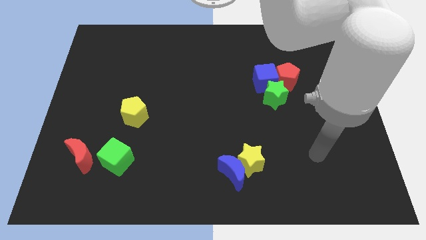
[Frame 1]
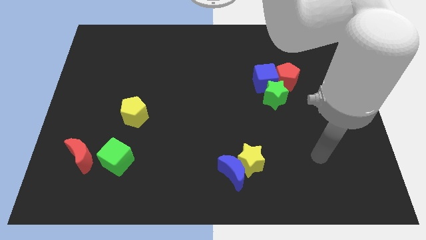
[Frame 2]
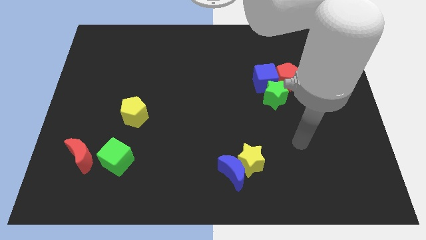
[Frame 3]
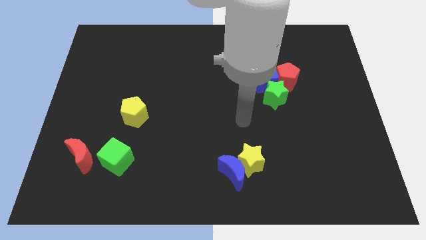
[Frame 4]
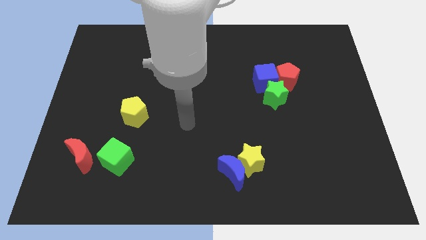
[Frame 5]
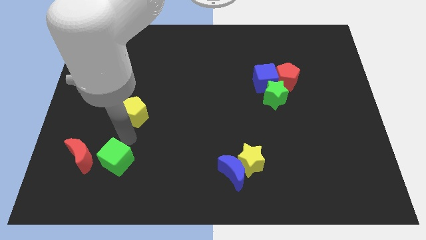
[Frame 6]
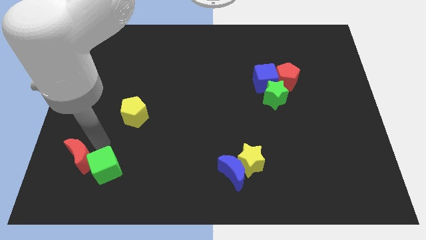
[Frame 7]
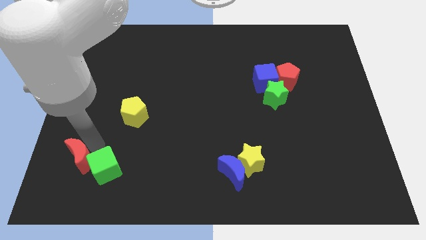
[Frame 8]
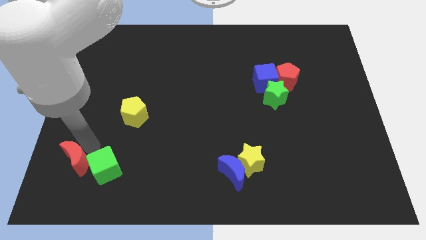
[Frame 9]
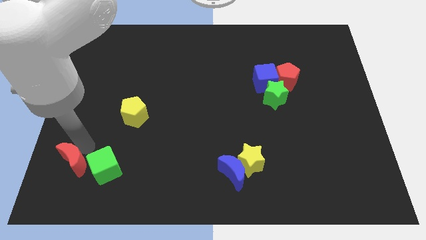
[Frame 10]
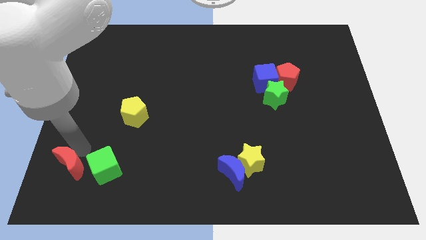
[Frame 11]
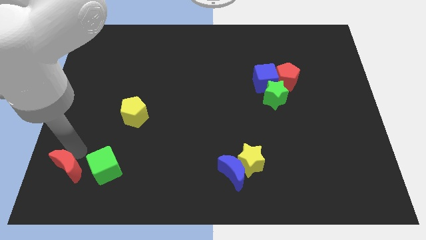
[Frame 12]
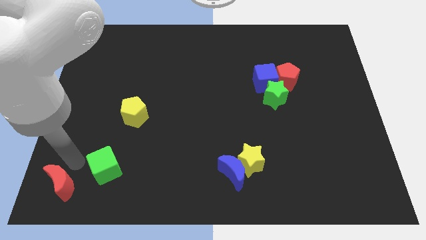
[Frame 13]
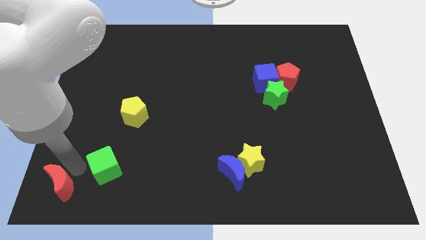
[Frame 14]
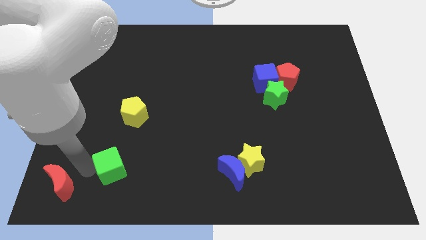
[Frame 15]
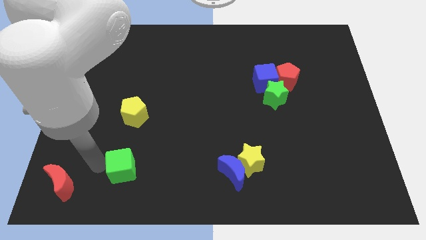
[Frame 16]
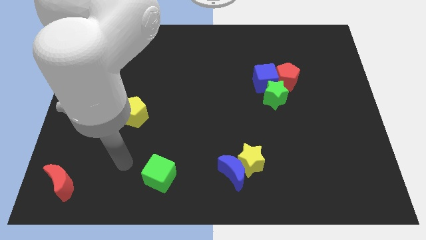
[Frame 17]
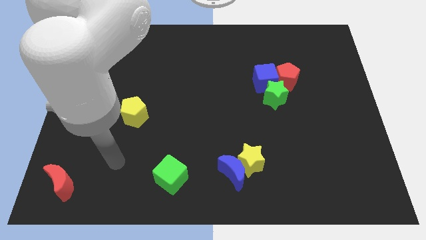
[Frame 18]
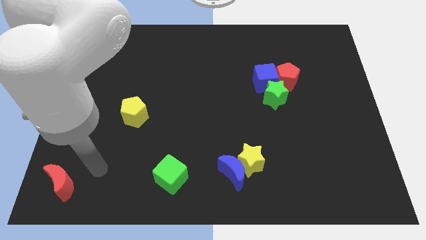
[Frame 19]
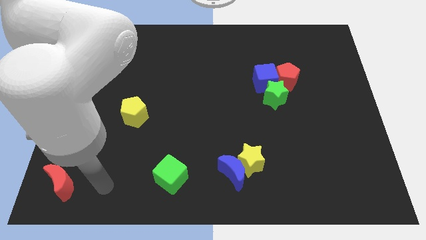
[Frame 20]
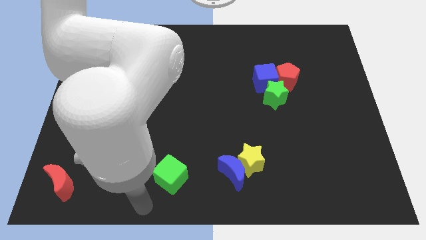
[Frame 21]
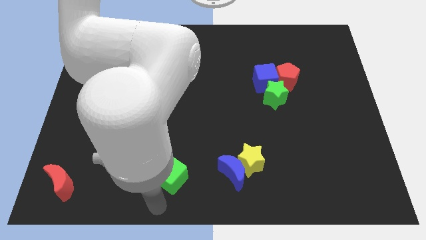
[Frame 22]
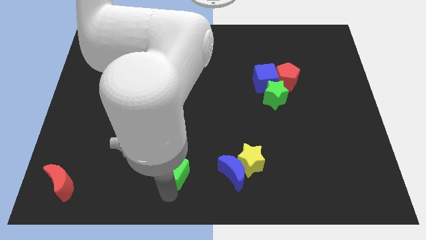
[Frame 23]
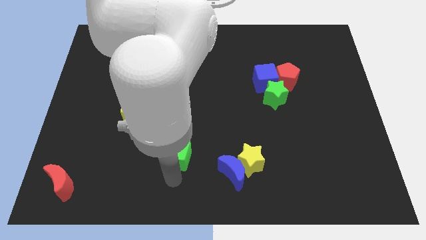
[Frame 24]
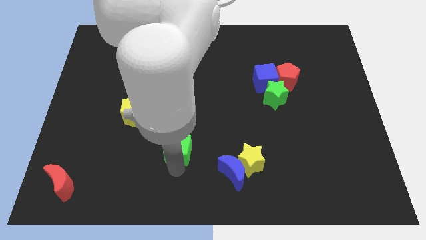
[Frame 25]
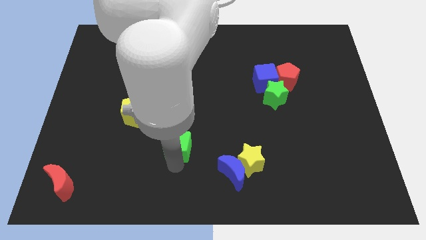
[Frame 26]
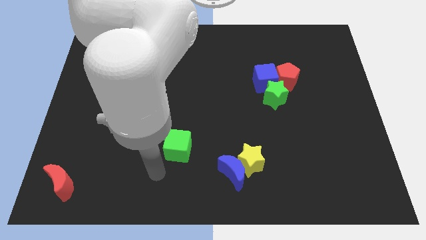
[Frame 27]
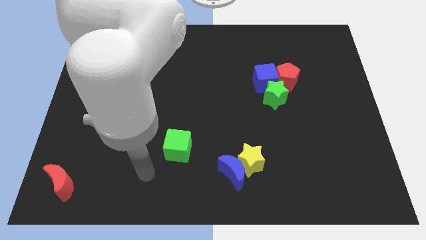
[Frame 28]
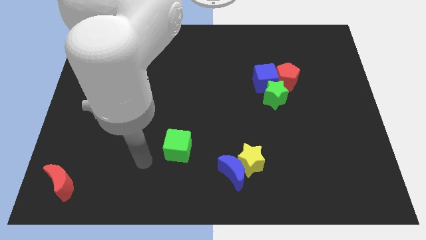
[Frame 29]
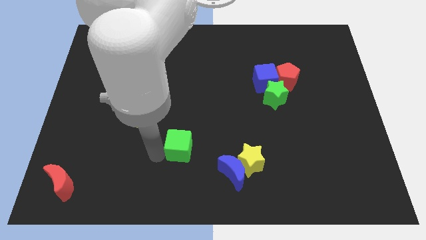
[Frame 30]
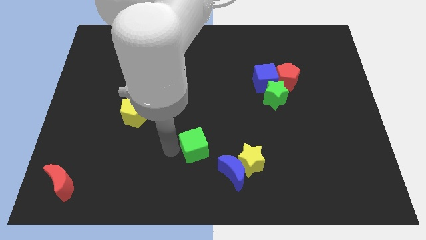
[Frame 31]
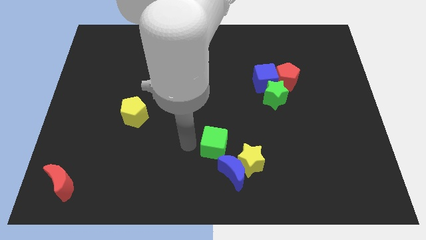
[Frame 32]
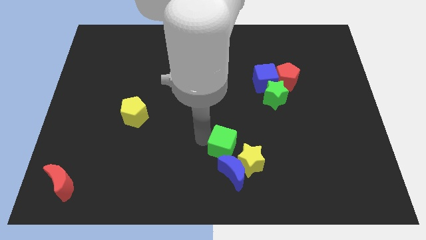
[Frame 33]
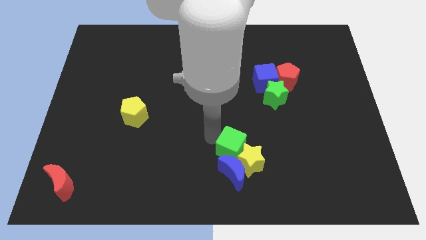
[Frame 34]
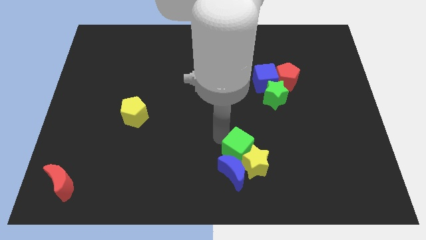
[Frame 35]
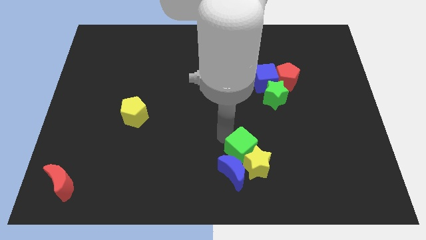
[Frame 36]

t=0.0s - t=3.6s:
push the green cube close to the yellow star

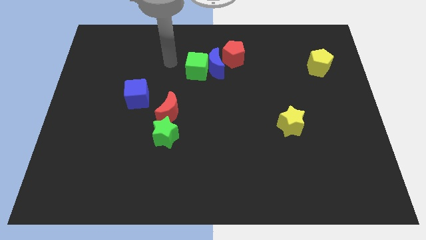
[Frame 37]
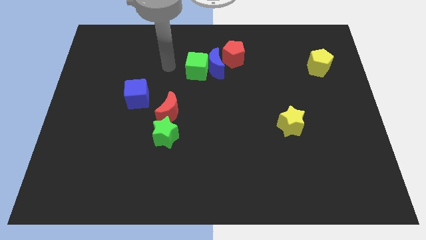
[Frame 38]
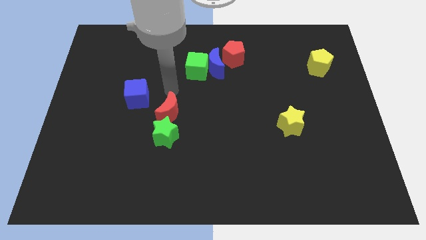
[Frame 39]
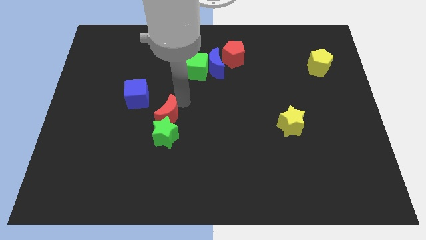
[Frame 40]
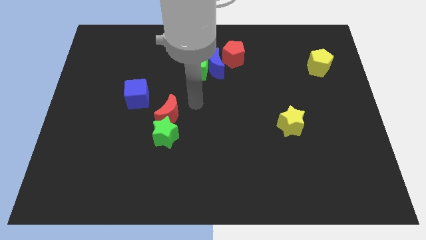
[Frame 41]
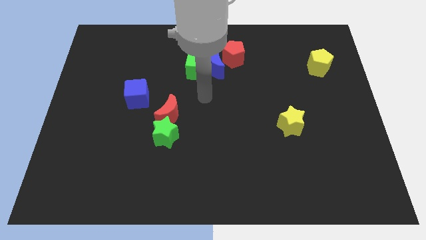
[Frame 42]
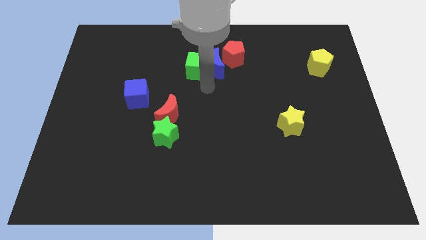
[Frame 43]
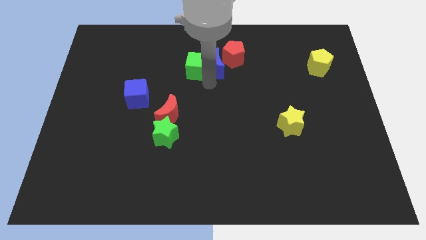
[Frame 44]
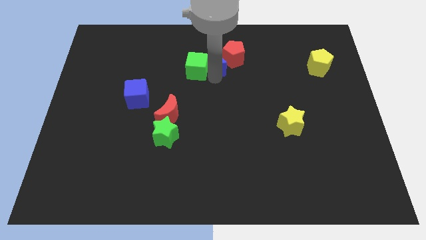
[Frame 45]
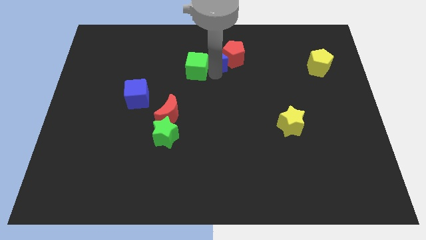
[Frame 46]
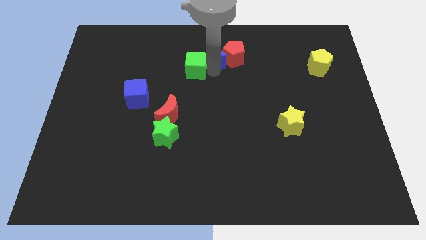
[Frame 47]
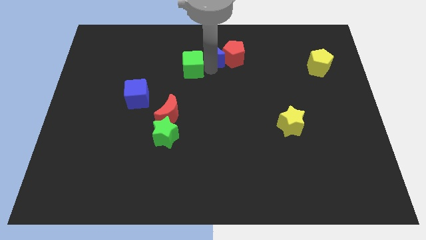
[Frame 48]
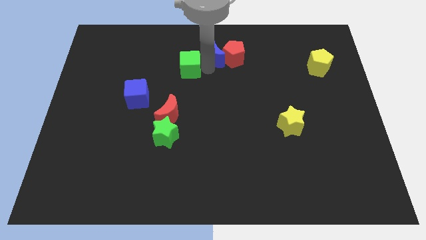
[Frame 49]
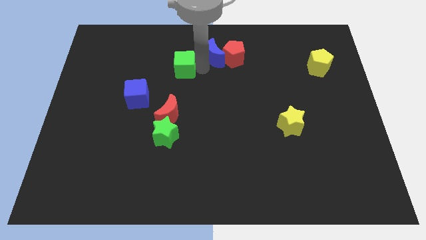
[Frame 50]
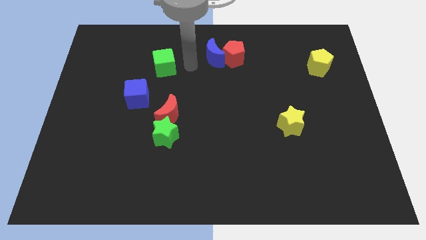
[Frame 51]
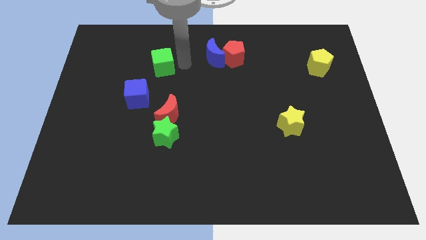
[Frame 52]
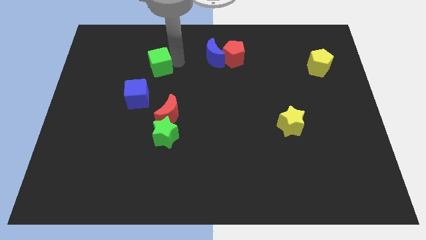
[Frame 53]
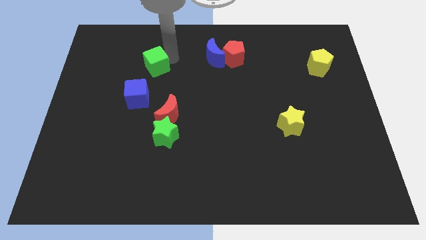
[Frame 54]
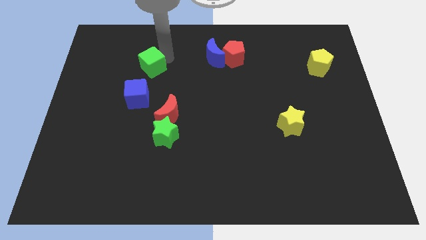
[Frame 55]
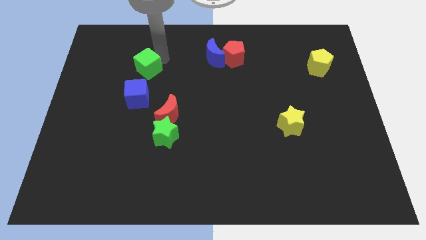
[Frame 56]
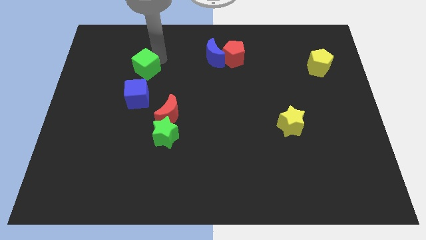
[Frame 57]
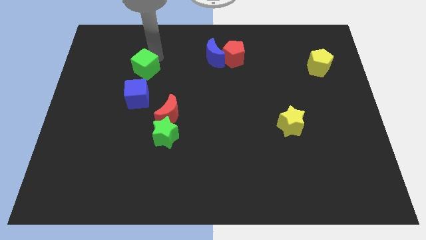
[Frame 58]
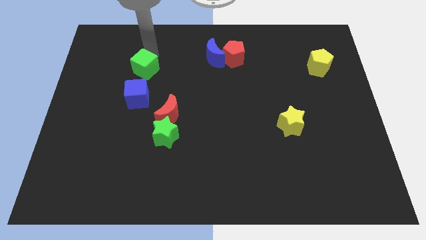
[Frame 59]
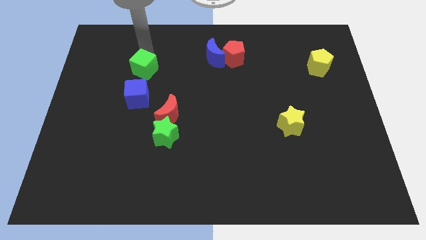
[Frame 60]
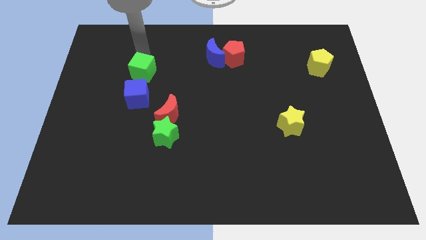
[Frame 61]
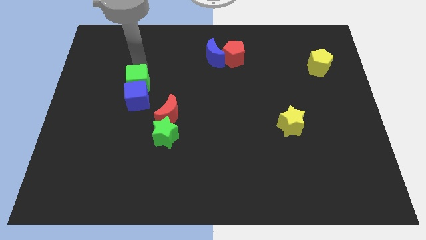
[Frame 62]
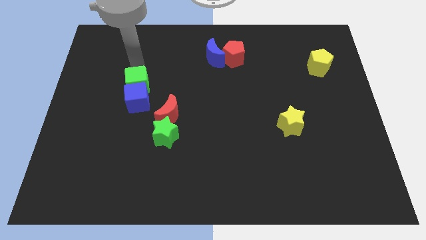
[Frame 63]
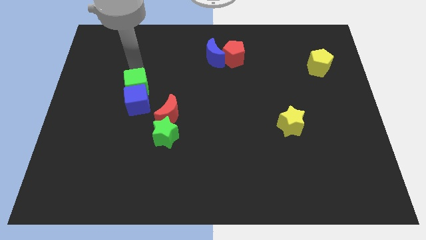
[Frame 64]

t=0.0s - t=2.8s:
slide the green cube towards the blue cube

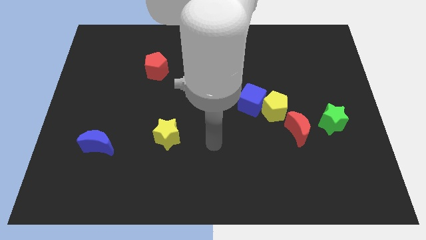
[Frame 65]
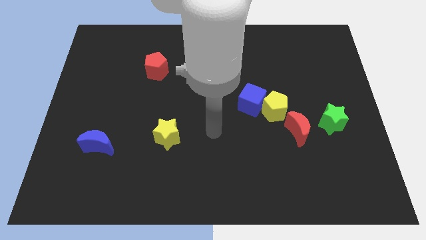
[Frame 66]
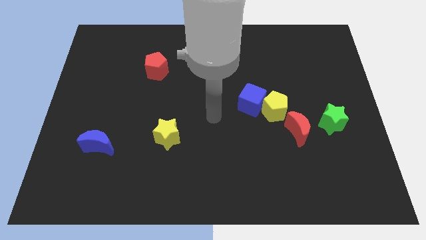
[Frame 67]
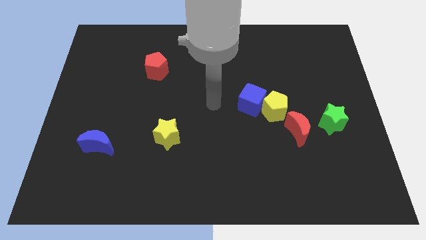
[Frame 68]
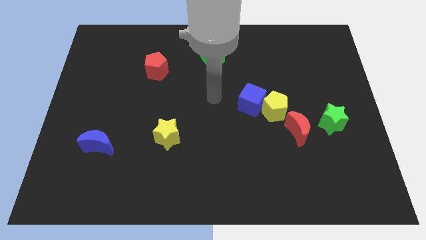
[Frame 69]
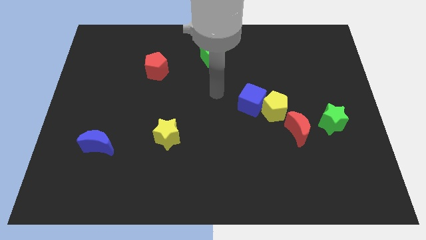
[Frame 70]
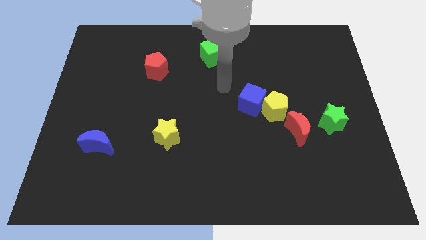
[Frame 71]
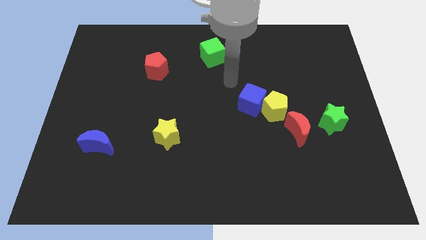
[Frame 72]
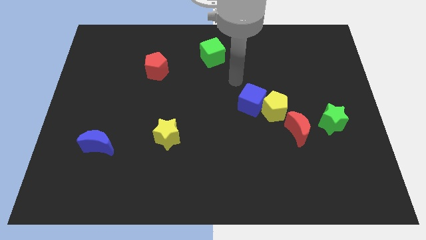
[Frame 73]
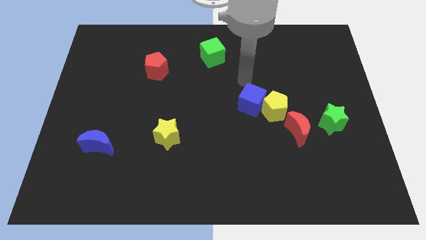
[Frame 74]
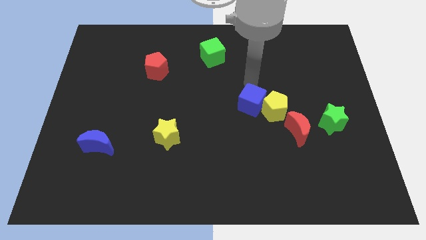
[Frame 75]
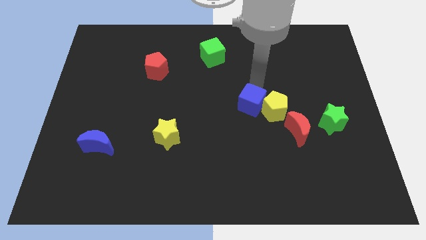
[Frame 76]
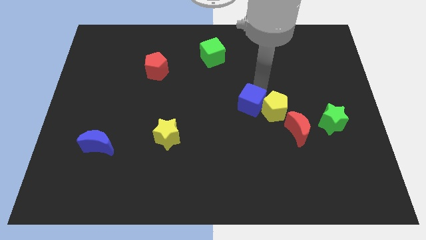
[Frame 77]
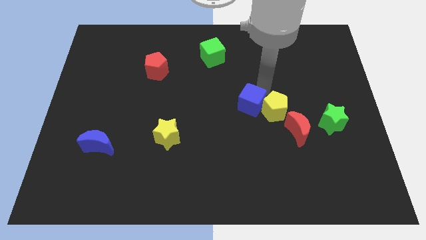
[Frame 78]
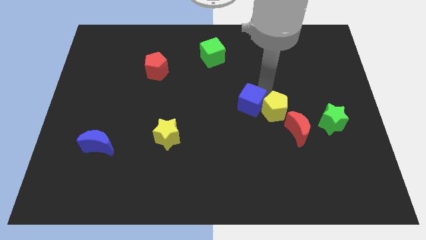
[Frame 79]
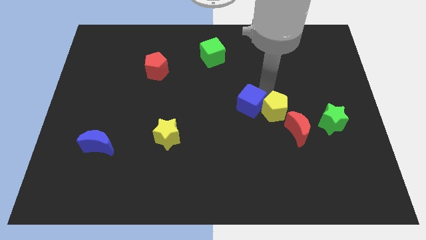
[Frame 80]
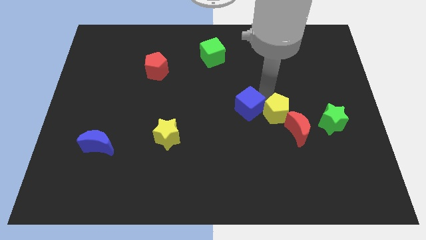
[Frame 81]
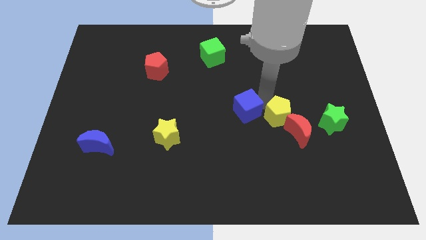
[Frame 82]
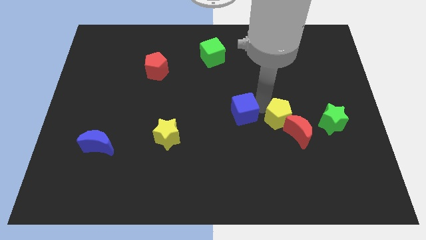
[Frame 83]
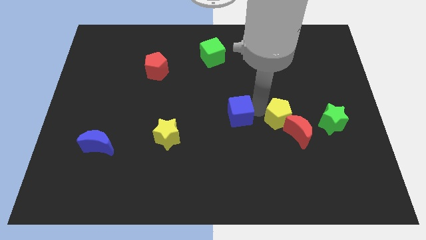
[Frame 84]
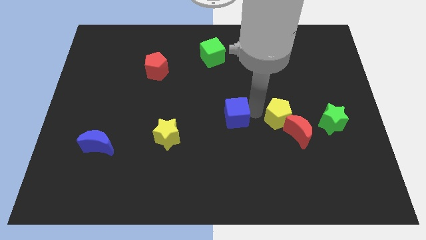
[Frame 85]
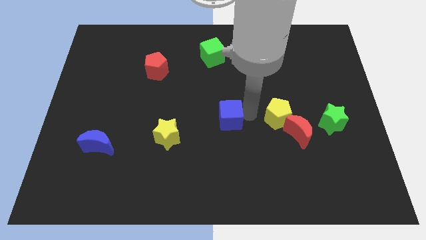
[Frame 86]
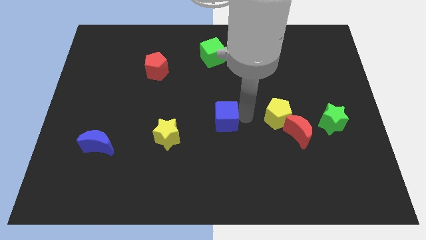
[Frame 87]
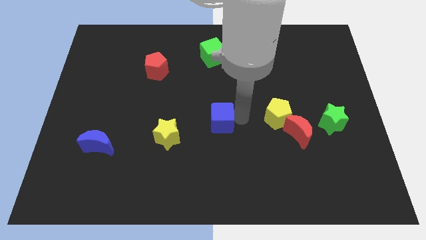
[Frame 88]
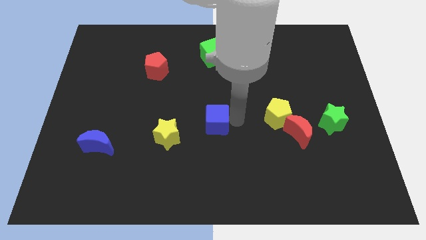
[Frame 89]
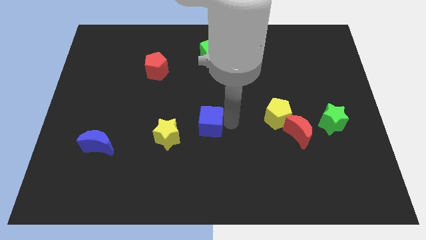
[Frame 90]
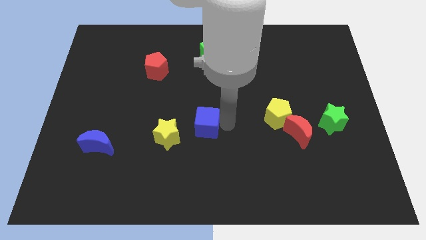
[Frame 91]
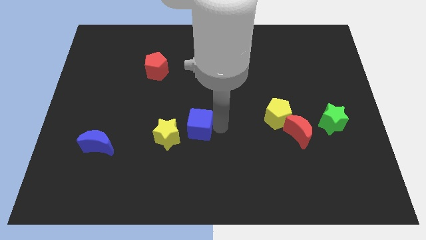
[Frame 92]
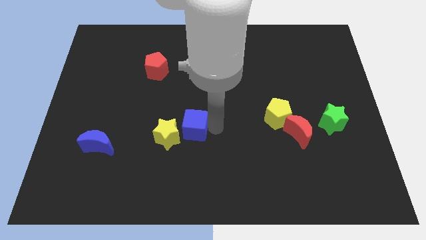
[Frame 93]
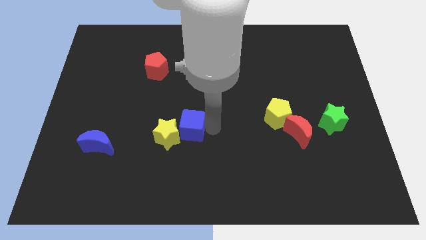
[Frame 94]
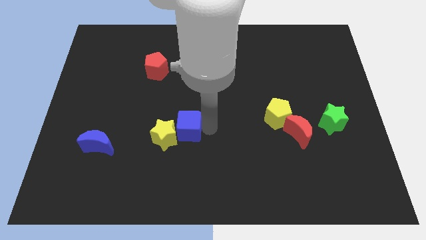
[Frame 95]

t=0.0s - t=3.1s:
move the blue cube next to the yellow star
